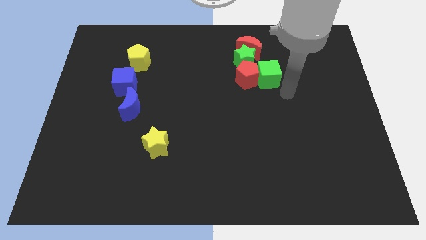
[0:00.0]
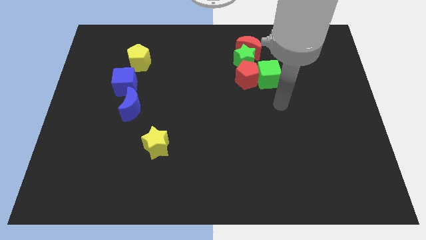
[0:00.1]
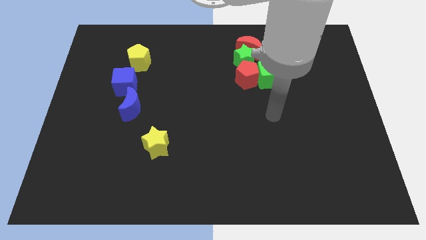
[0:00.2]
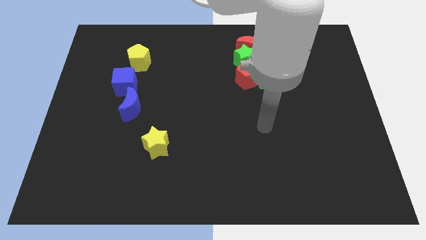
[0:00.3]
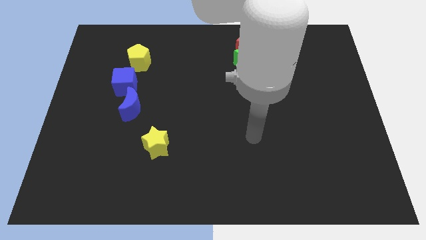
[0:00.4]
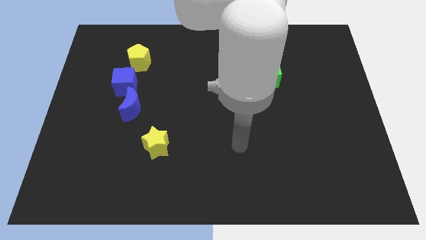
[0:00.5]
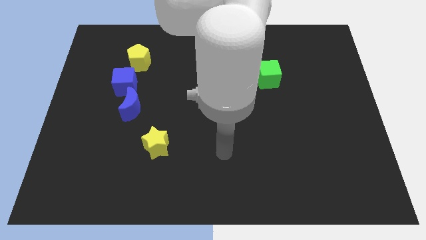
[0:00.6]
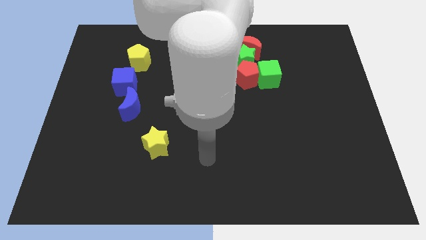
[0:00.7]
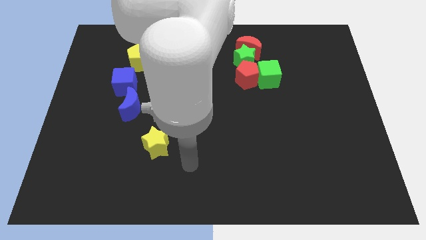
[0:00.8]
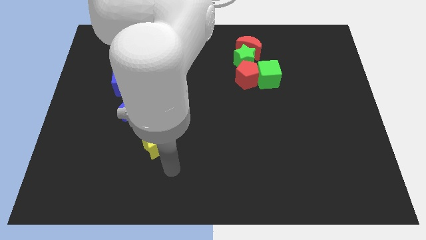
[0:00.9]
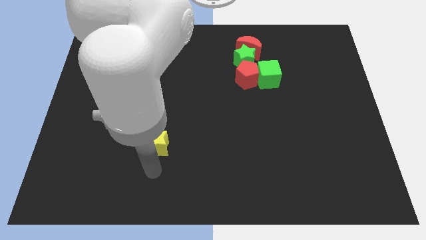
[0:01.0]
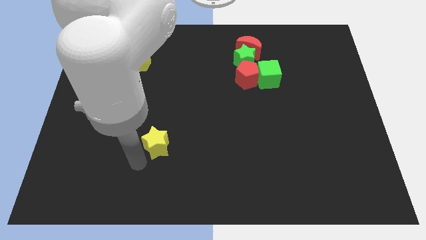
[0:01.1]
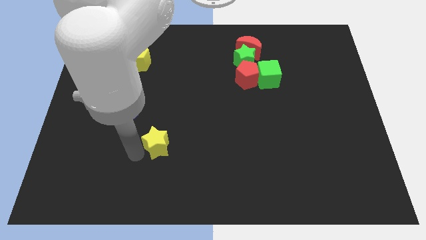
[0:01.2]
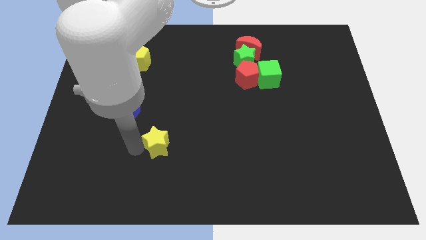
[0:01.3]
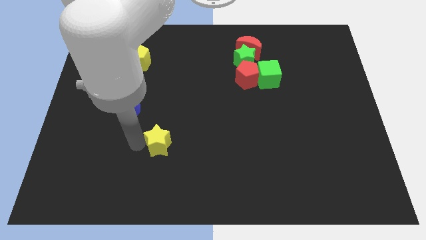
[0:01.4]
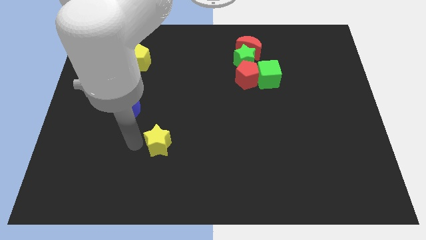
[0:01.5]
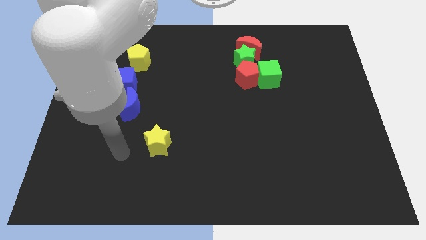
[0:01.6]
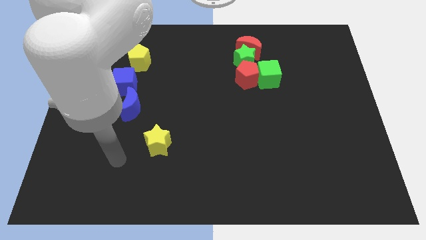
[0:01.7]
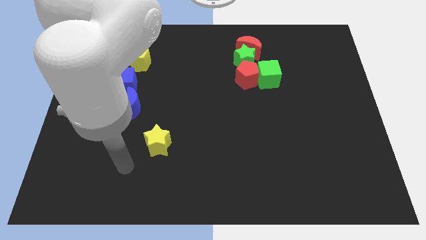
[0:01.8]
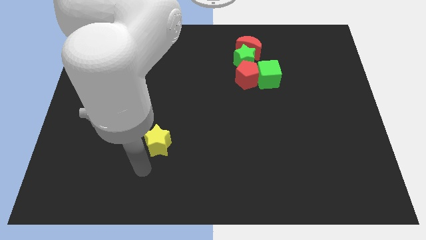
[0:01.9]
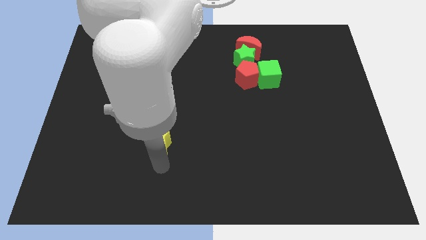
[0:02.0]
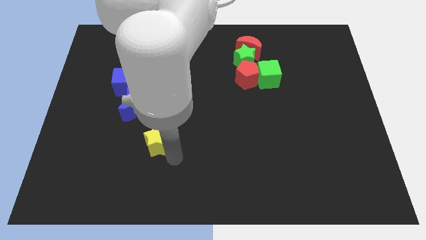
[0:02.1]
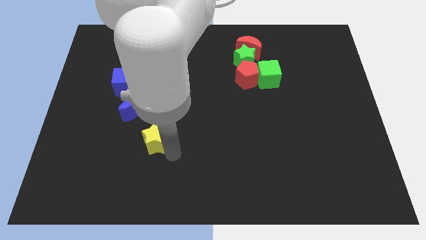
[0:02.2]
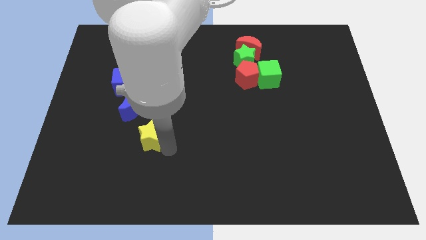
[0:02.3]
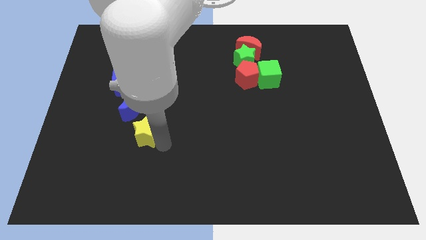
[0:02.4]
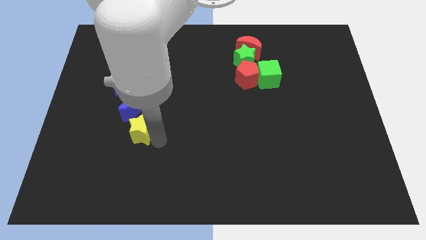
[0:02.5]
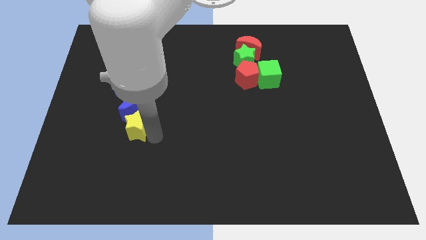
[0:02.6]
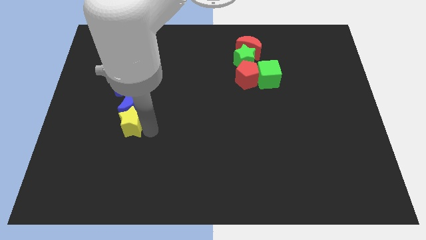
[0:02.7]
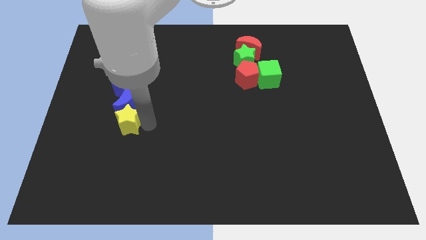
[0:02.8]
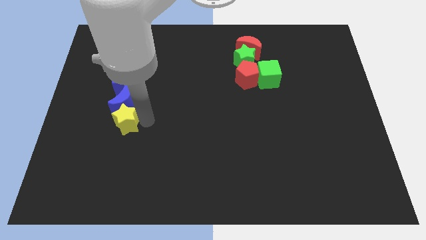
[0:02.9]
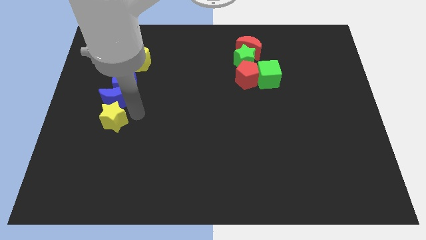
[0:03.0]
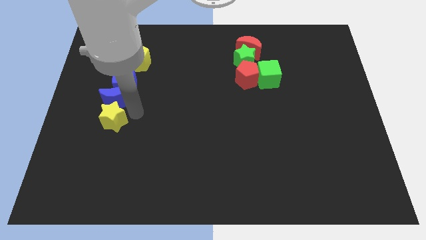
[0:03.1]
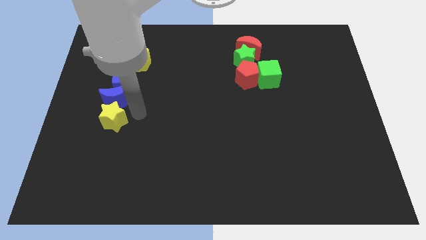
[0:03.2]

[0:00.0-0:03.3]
push yellow star into the blue moon

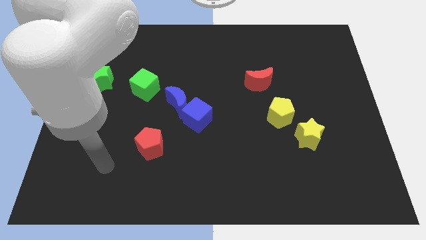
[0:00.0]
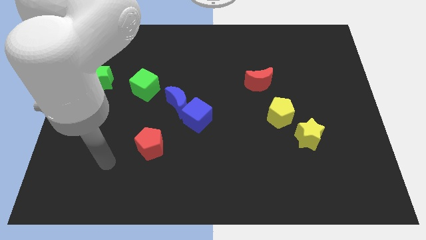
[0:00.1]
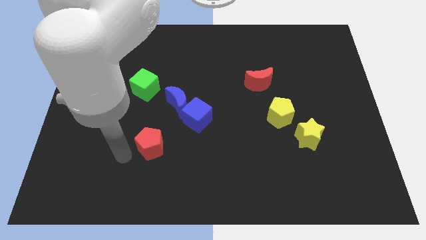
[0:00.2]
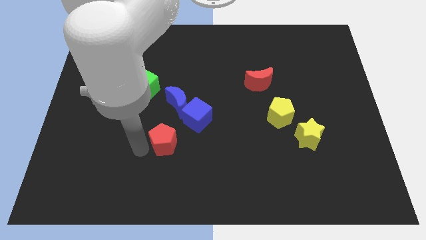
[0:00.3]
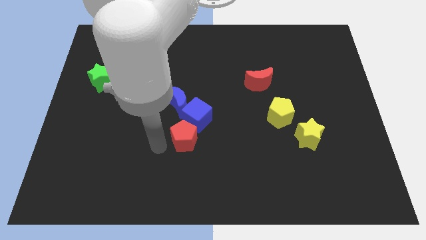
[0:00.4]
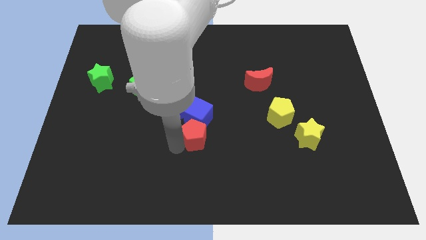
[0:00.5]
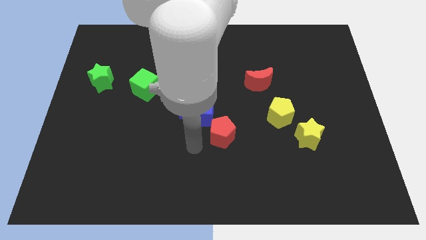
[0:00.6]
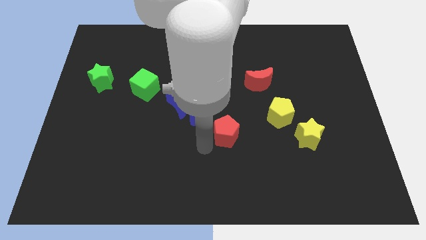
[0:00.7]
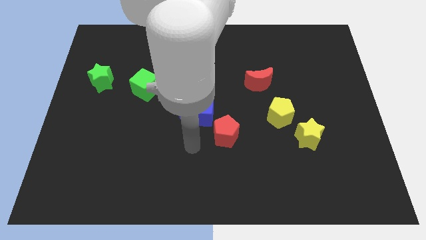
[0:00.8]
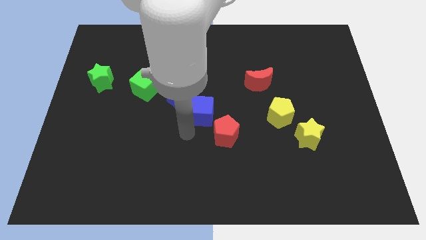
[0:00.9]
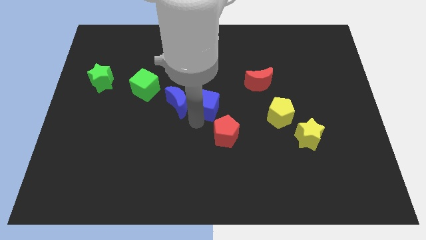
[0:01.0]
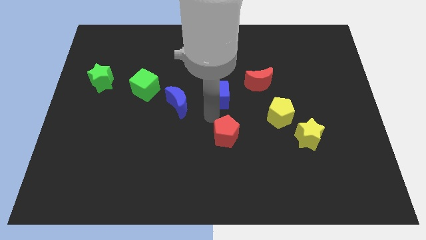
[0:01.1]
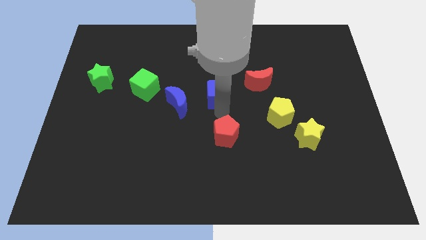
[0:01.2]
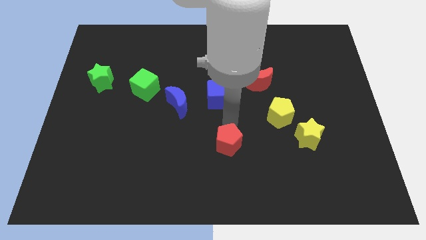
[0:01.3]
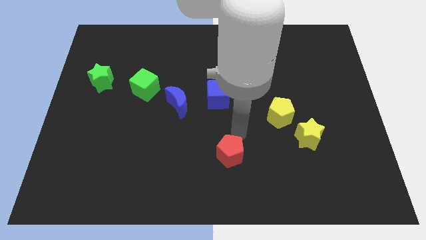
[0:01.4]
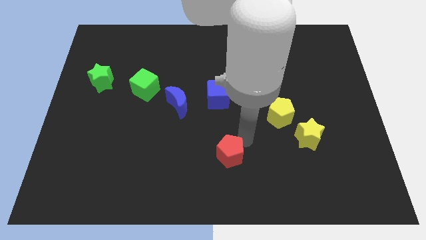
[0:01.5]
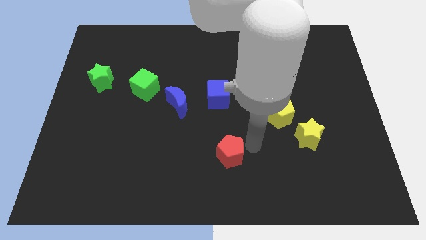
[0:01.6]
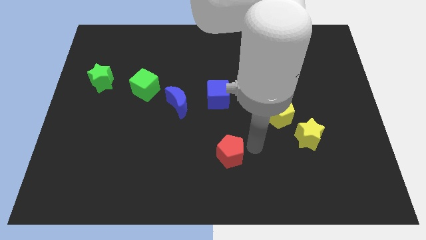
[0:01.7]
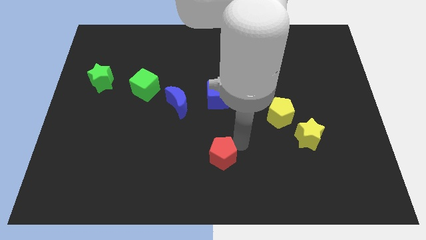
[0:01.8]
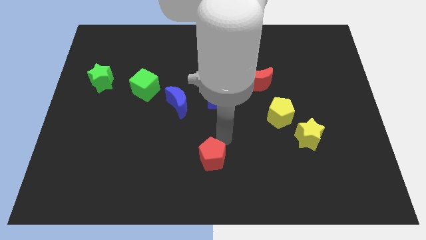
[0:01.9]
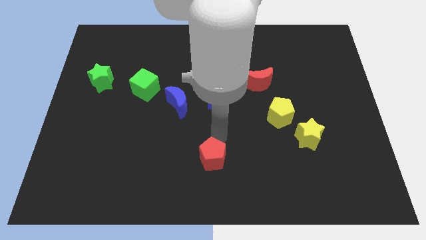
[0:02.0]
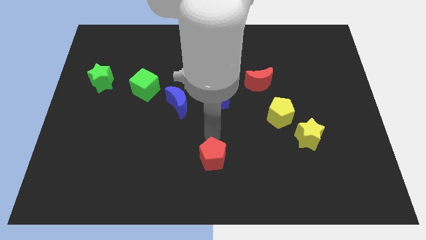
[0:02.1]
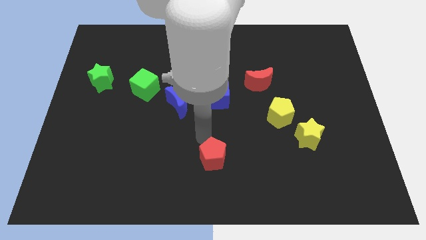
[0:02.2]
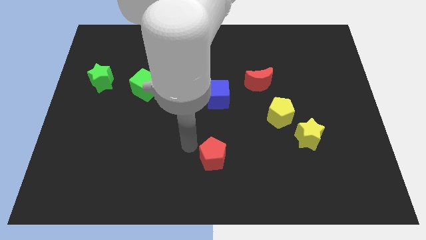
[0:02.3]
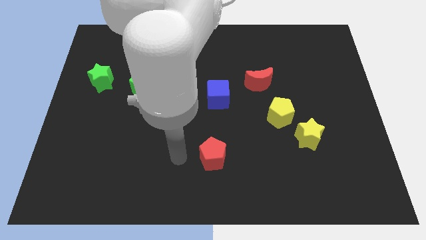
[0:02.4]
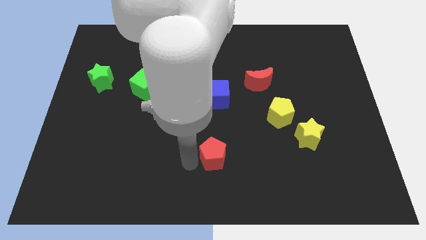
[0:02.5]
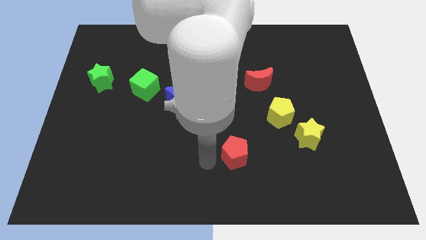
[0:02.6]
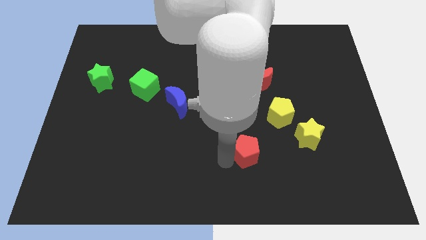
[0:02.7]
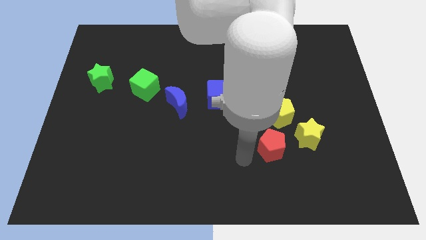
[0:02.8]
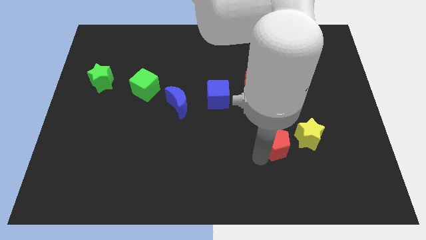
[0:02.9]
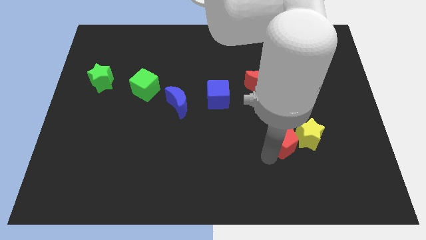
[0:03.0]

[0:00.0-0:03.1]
push red pentagon below yellow pentagon

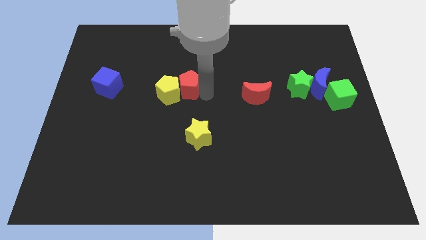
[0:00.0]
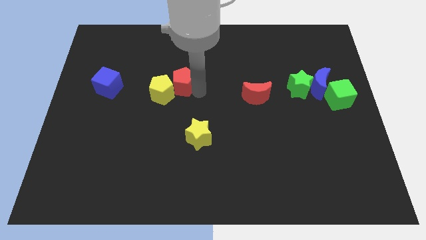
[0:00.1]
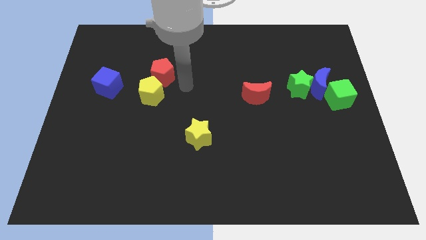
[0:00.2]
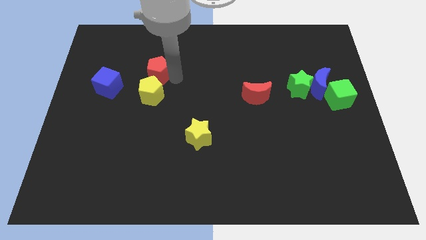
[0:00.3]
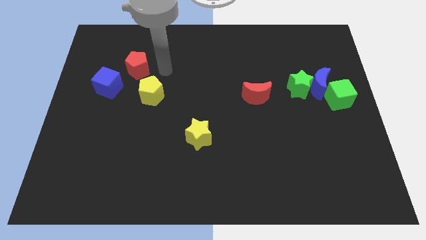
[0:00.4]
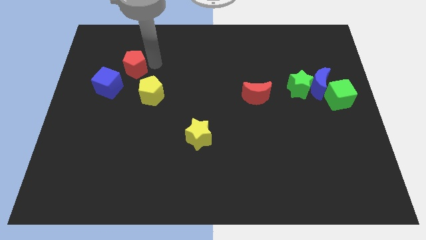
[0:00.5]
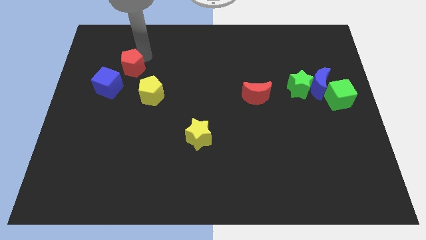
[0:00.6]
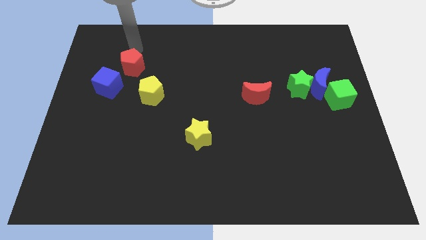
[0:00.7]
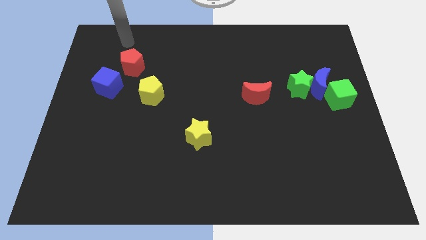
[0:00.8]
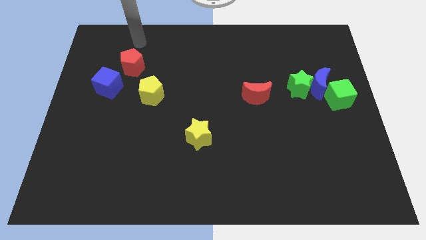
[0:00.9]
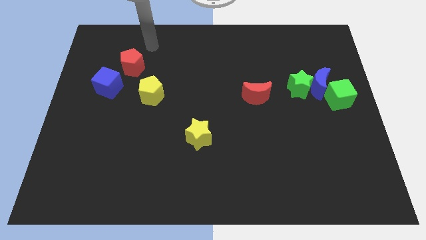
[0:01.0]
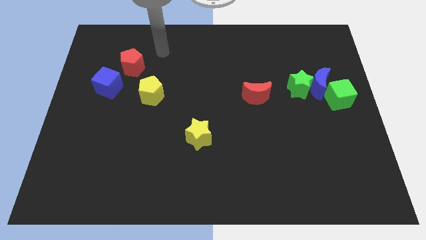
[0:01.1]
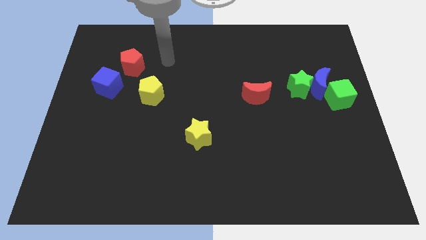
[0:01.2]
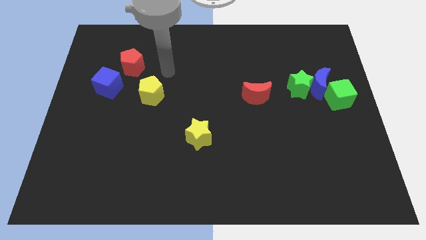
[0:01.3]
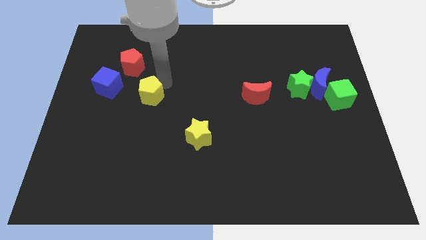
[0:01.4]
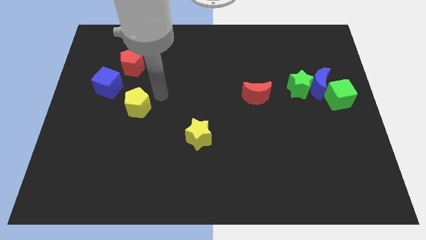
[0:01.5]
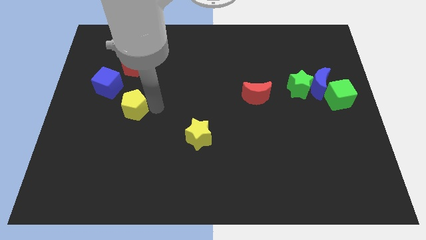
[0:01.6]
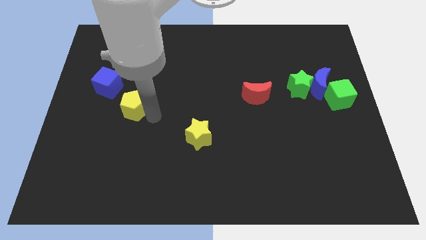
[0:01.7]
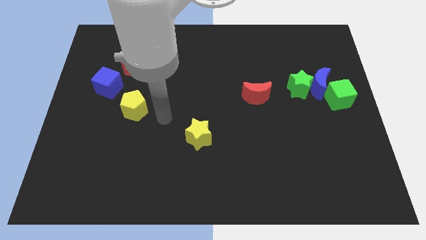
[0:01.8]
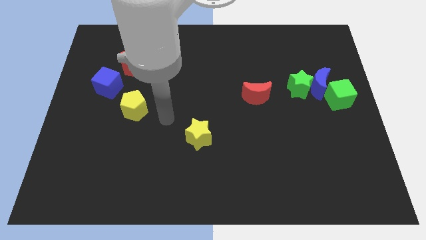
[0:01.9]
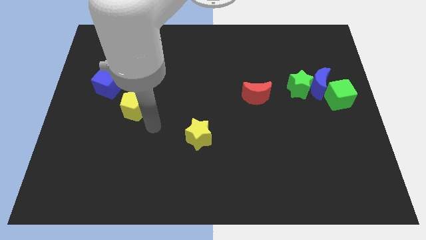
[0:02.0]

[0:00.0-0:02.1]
separate the red pentagon and yellow pentagon

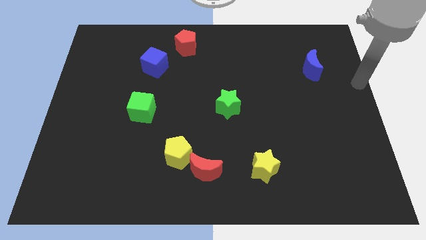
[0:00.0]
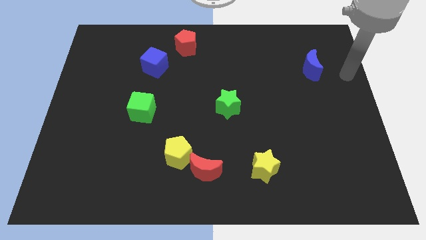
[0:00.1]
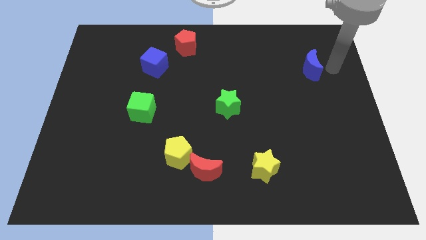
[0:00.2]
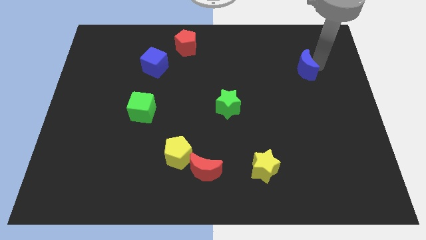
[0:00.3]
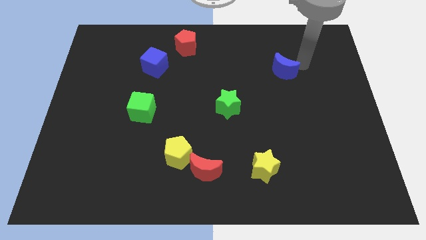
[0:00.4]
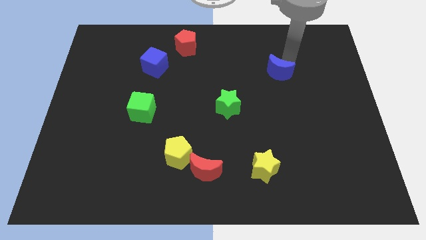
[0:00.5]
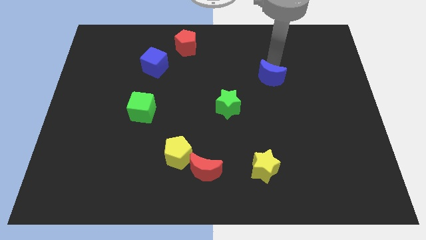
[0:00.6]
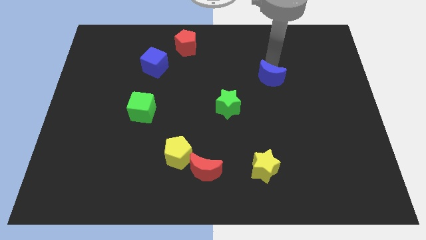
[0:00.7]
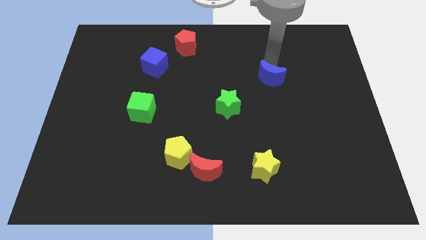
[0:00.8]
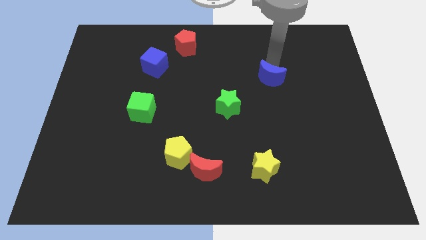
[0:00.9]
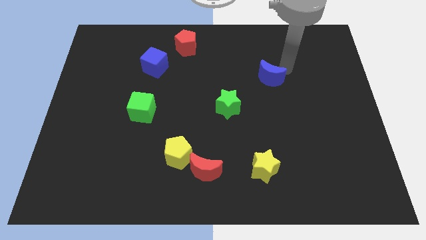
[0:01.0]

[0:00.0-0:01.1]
place blue crescent above yellow star
